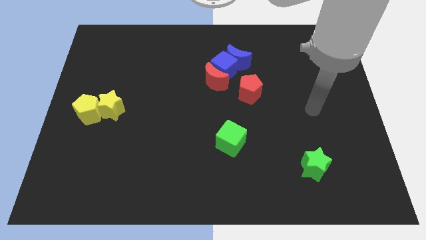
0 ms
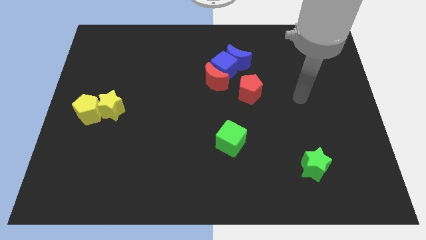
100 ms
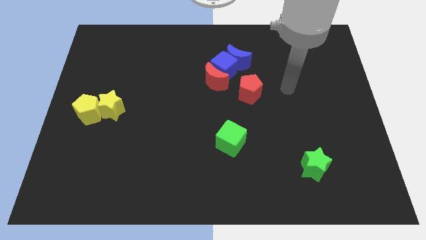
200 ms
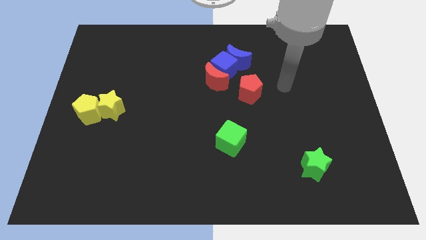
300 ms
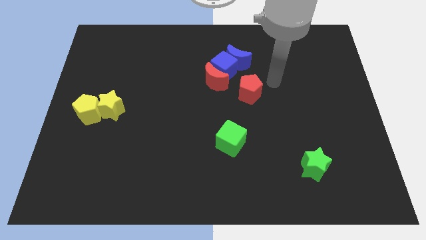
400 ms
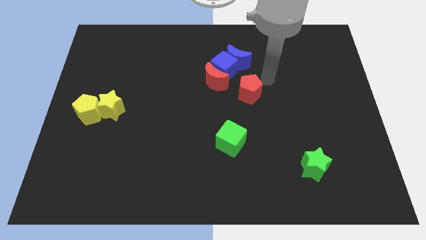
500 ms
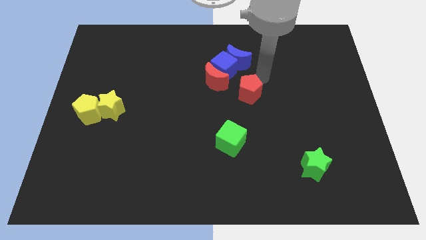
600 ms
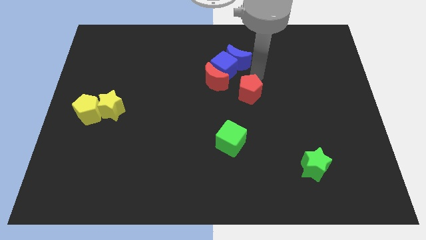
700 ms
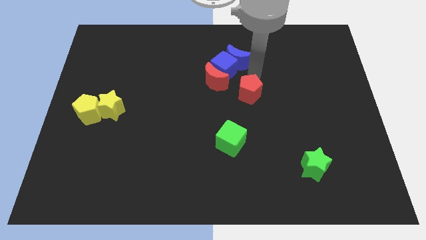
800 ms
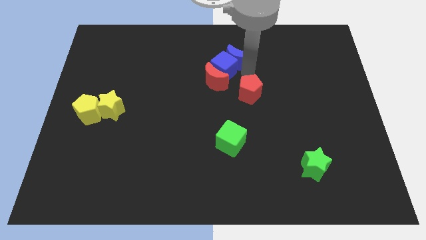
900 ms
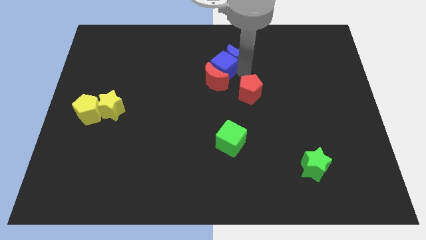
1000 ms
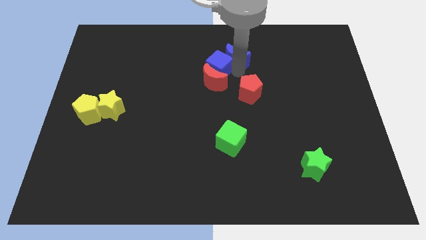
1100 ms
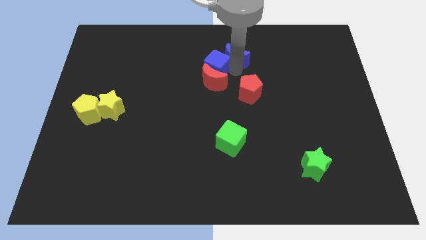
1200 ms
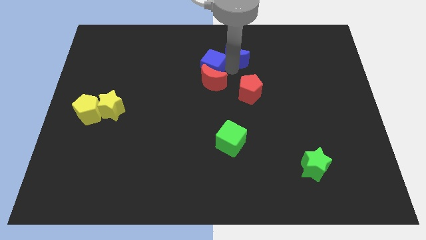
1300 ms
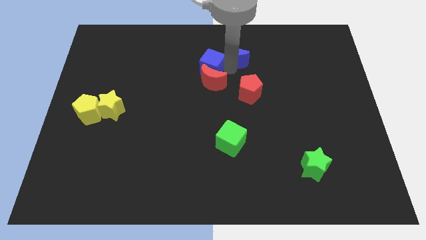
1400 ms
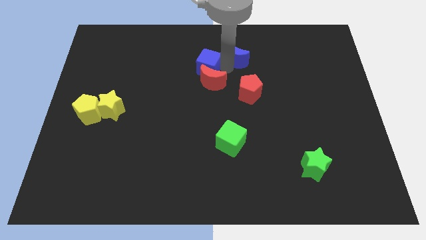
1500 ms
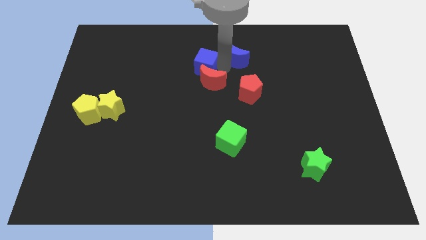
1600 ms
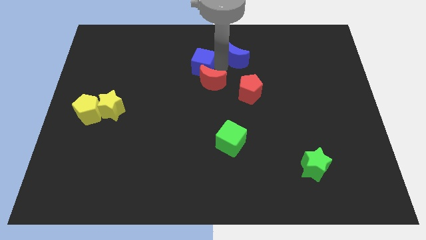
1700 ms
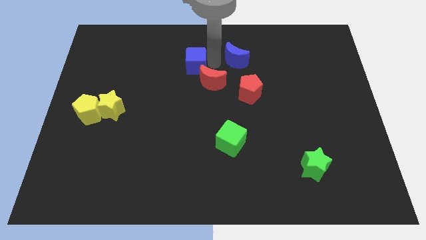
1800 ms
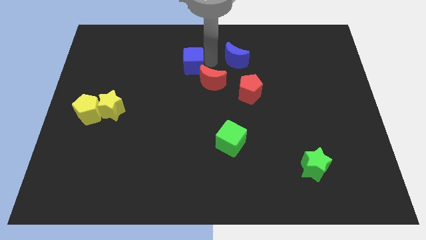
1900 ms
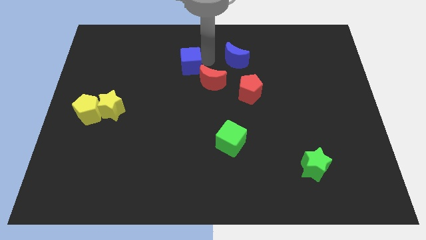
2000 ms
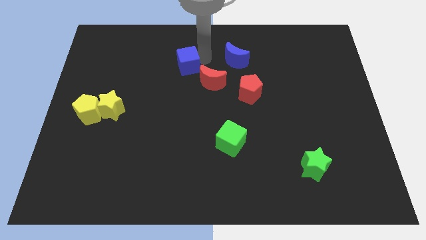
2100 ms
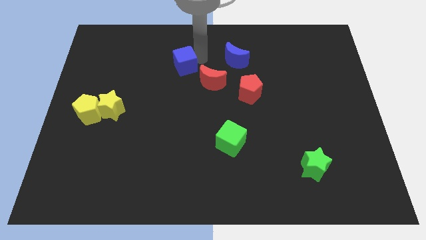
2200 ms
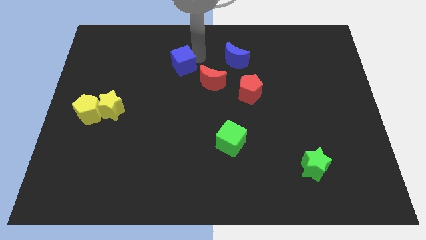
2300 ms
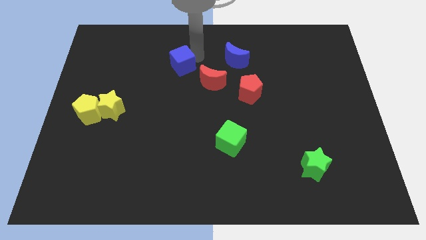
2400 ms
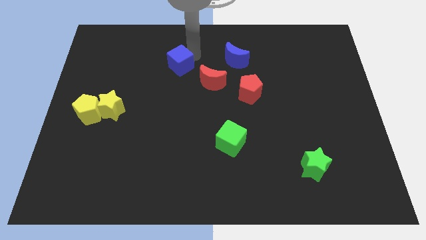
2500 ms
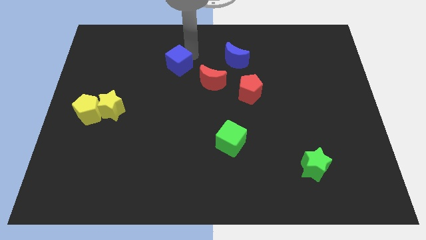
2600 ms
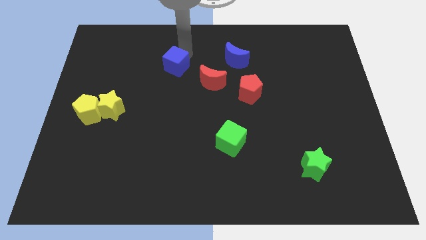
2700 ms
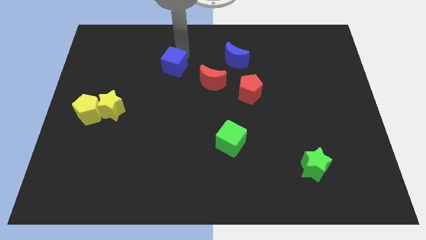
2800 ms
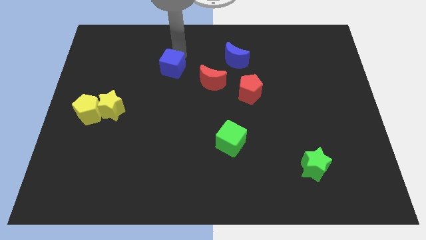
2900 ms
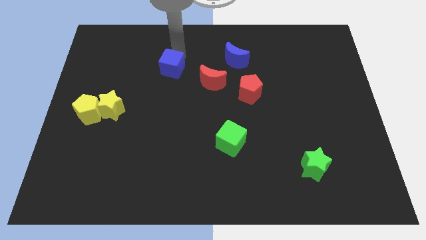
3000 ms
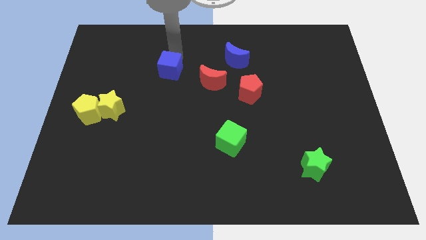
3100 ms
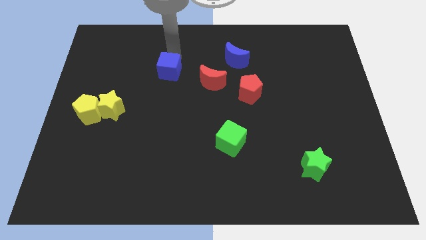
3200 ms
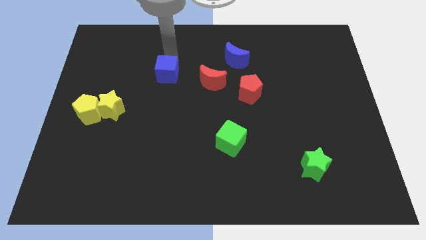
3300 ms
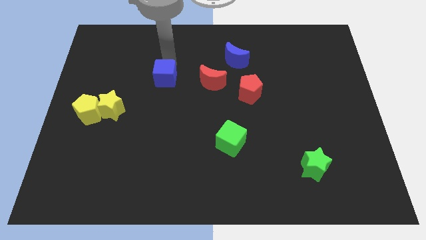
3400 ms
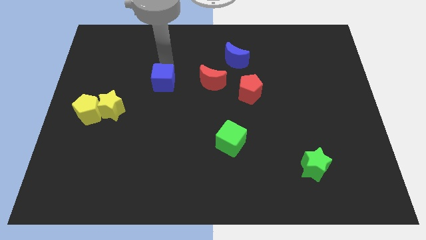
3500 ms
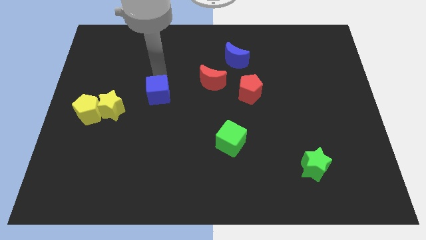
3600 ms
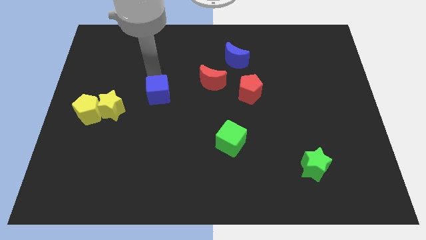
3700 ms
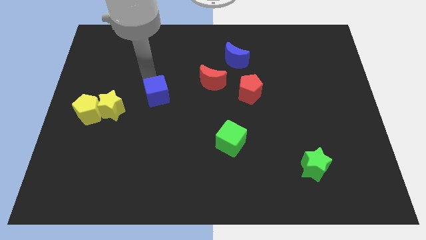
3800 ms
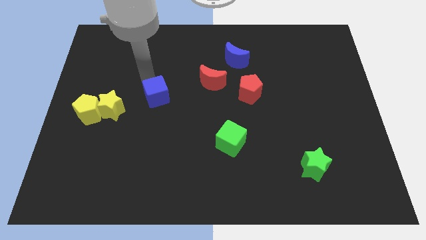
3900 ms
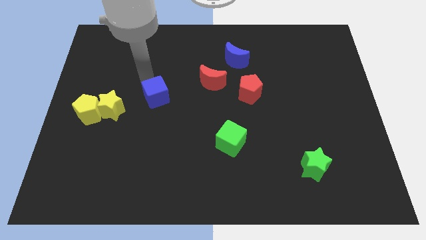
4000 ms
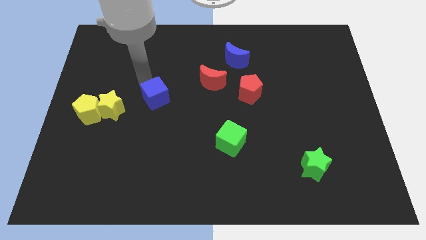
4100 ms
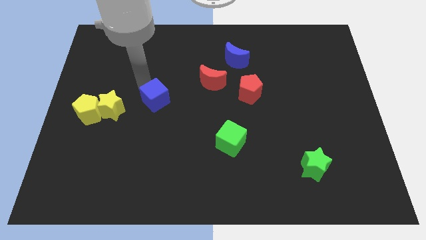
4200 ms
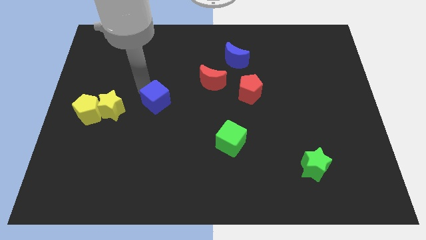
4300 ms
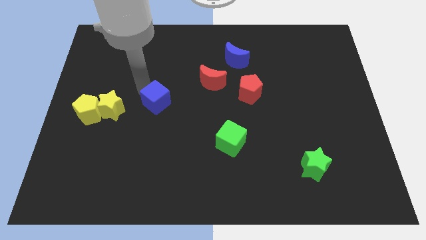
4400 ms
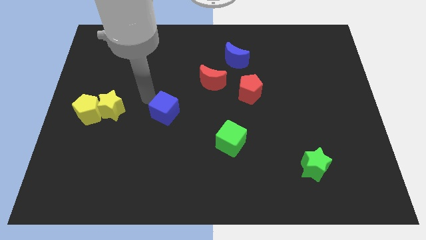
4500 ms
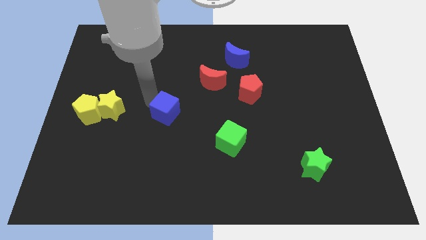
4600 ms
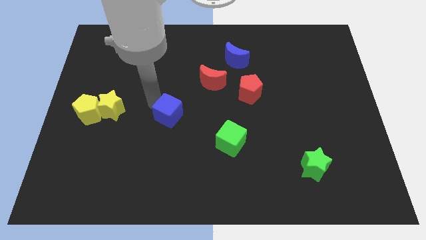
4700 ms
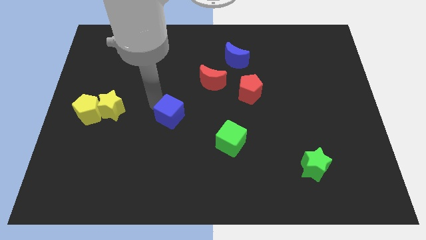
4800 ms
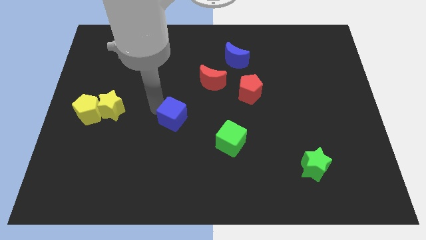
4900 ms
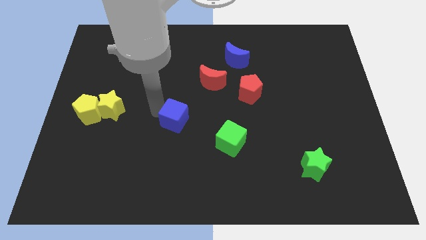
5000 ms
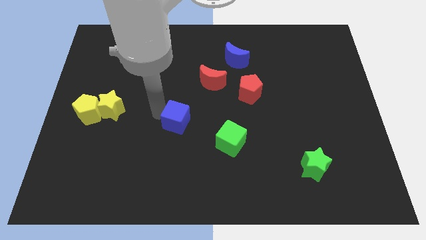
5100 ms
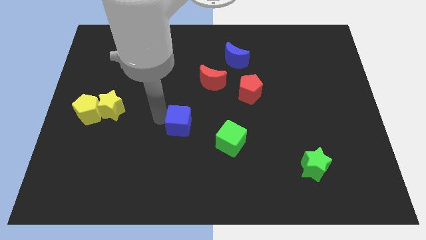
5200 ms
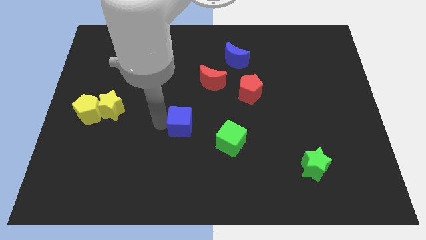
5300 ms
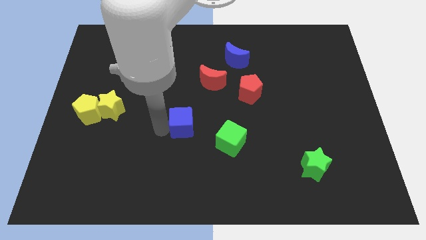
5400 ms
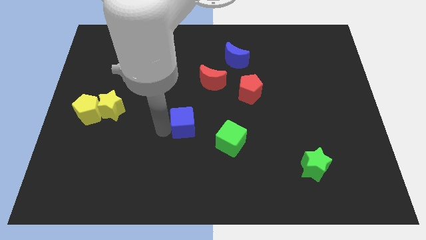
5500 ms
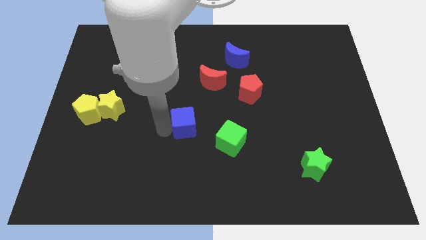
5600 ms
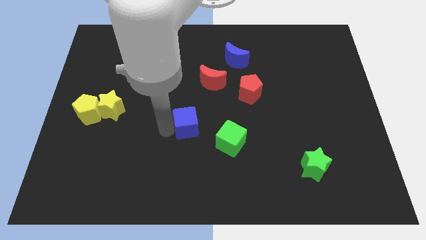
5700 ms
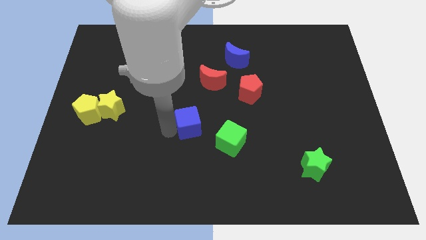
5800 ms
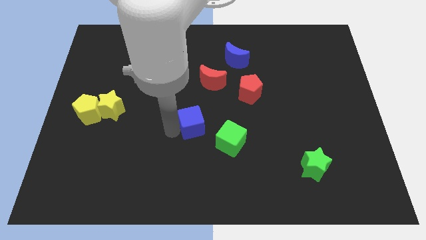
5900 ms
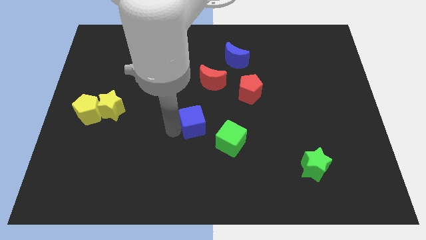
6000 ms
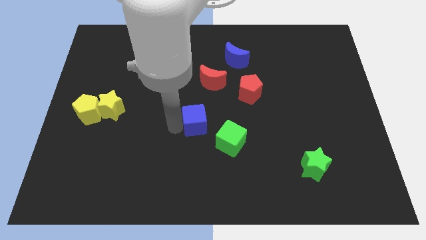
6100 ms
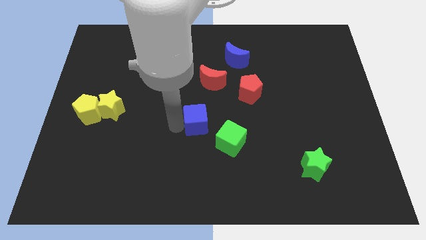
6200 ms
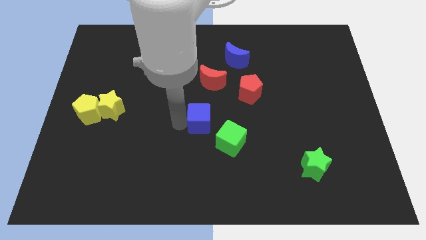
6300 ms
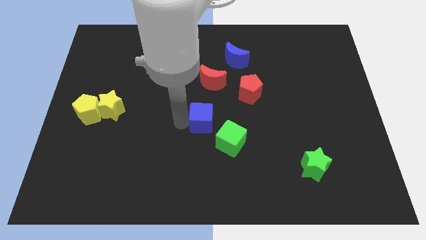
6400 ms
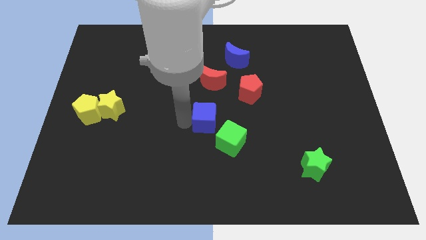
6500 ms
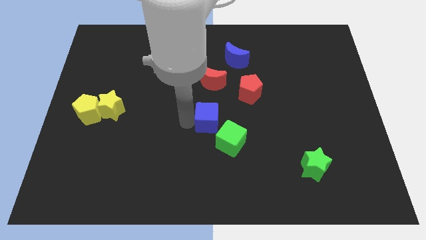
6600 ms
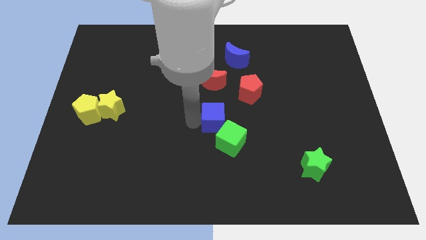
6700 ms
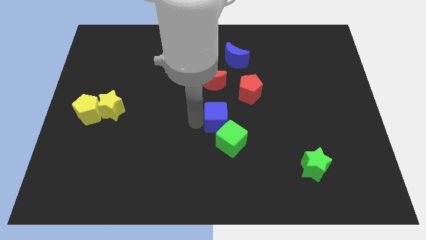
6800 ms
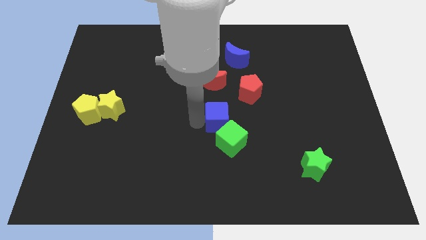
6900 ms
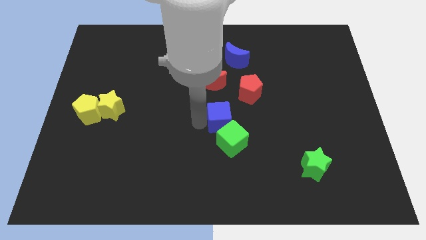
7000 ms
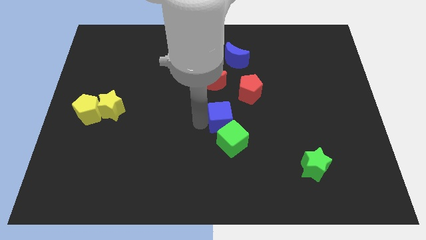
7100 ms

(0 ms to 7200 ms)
put the blue cube towards the green cube

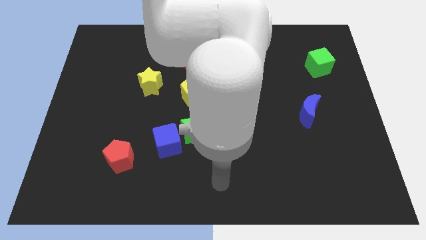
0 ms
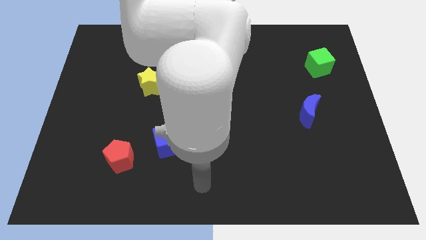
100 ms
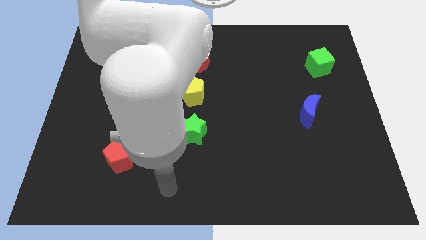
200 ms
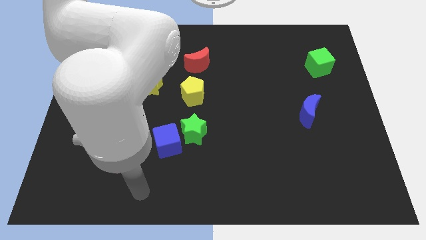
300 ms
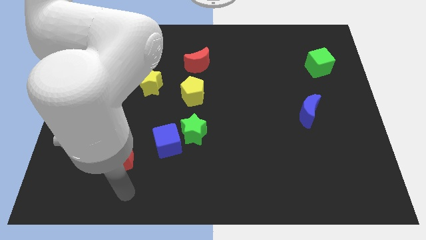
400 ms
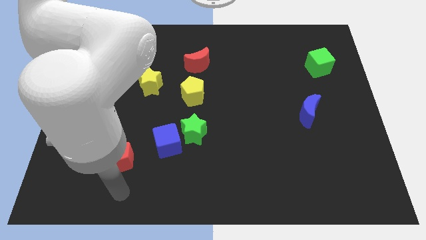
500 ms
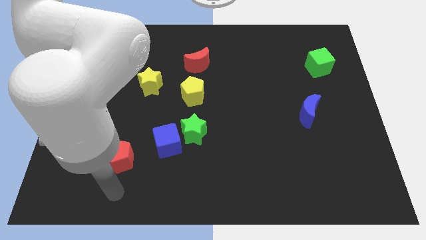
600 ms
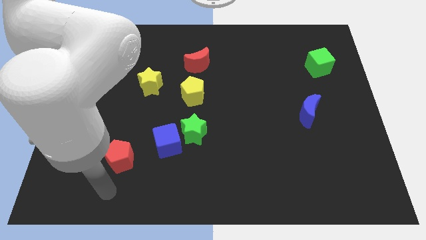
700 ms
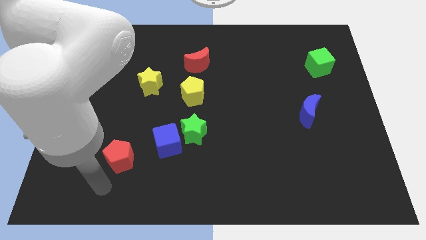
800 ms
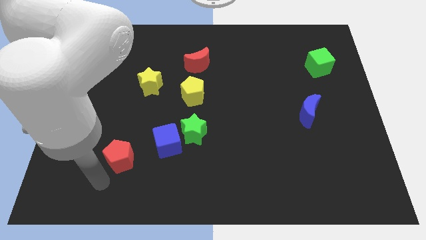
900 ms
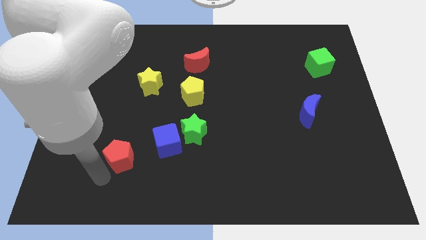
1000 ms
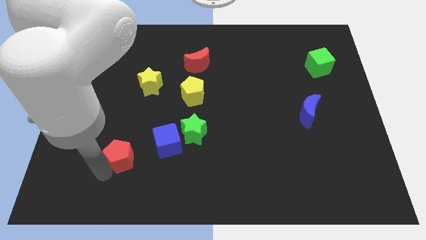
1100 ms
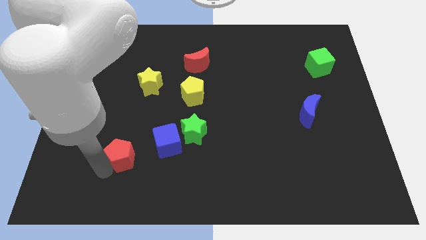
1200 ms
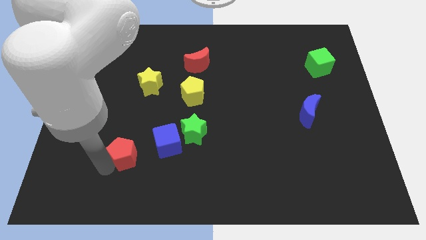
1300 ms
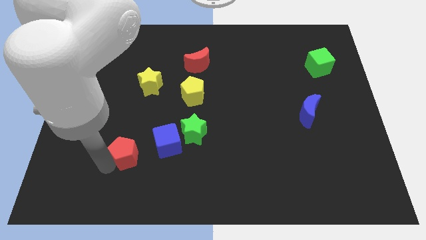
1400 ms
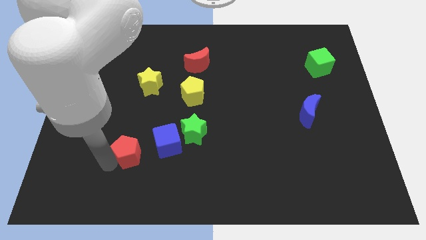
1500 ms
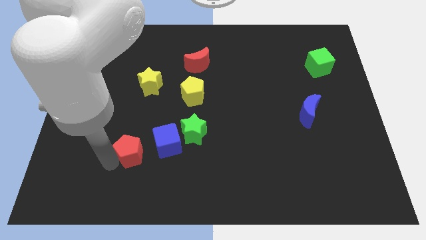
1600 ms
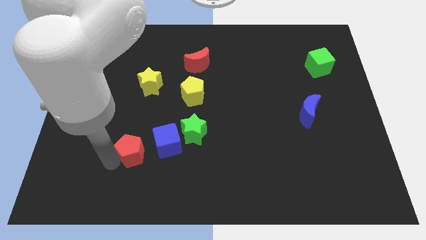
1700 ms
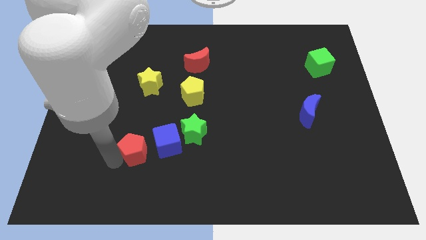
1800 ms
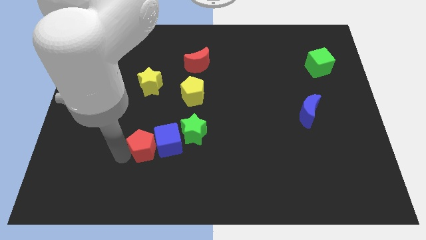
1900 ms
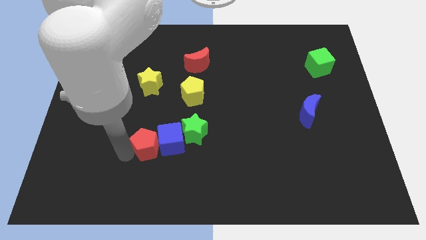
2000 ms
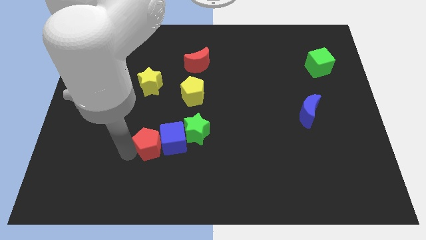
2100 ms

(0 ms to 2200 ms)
push the red pentagon to the blue cube
